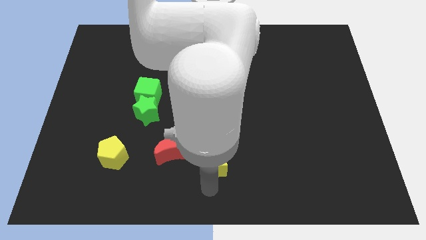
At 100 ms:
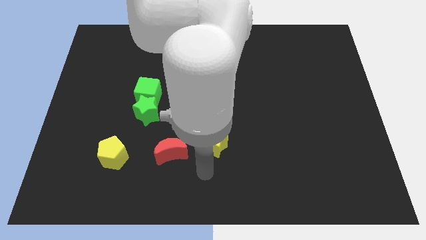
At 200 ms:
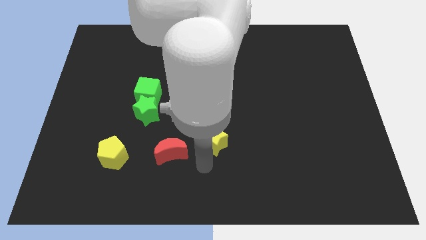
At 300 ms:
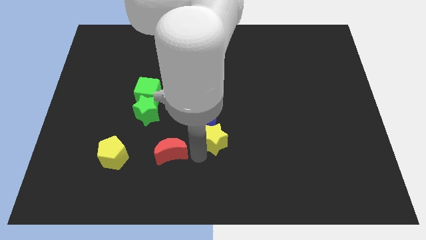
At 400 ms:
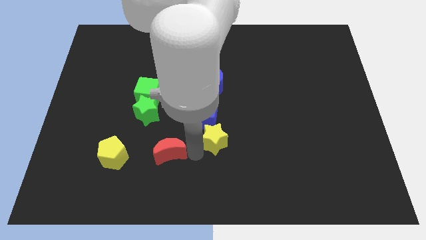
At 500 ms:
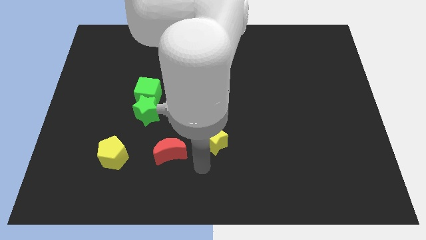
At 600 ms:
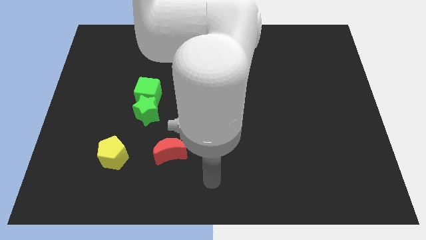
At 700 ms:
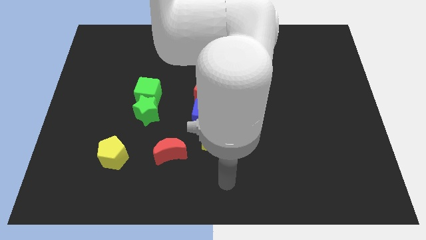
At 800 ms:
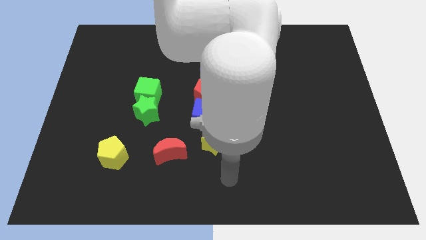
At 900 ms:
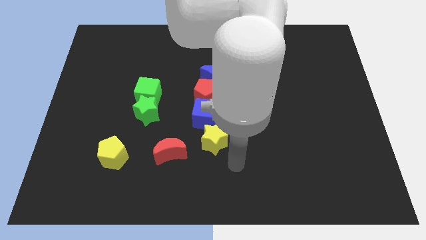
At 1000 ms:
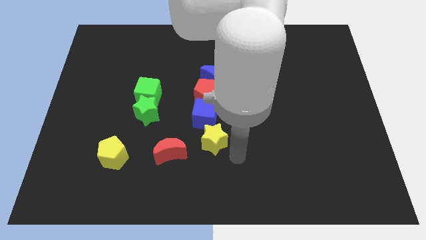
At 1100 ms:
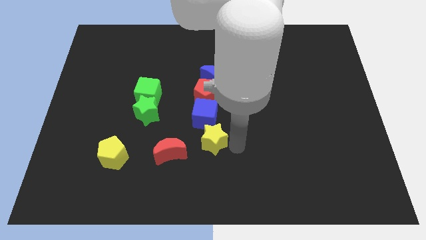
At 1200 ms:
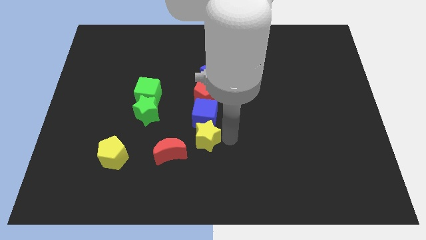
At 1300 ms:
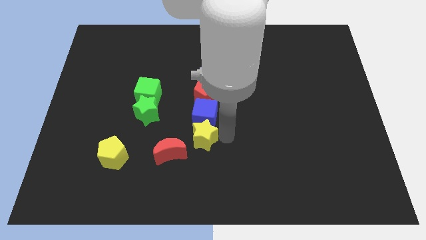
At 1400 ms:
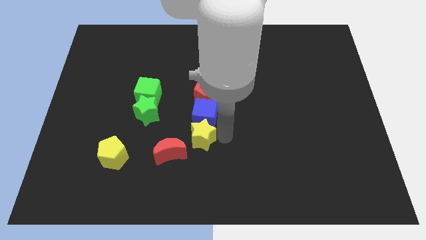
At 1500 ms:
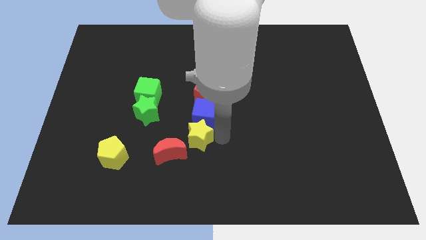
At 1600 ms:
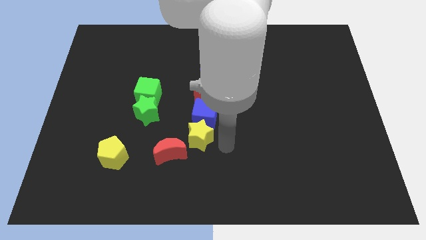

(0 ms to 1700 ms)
push the yellow star to the bottom of the blue cube

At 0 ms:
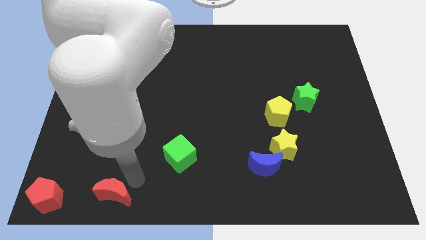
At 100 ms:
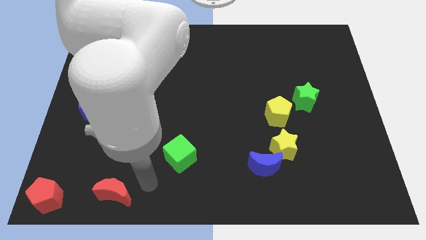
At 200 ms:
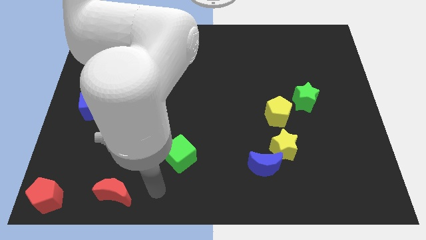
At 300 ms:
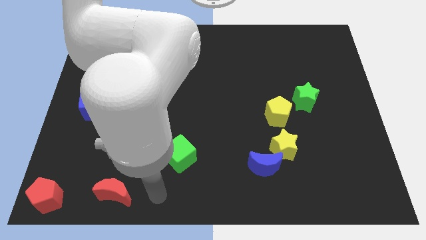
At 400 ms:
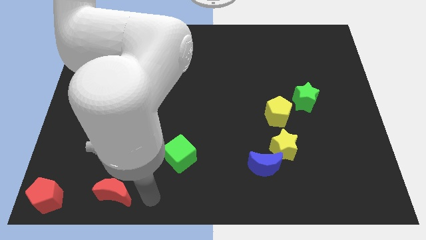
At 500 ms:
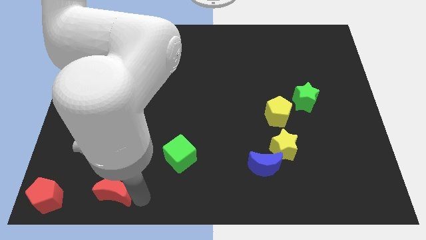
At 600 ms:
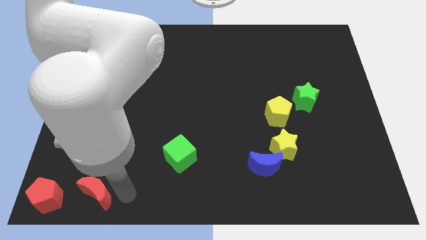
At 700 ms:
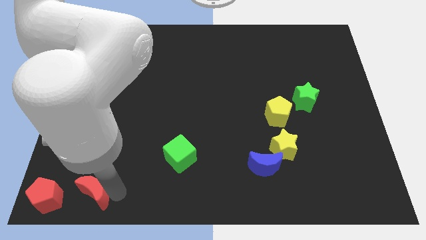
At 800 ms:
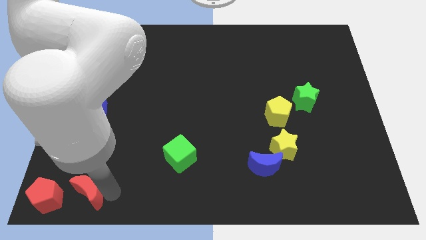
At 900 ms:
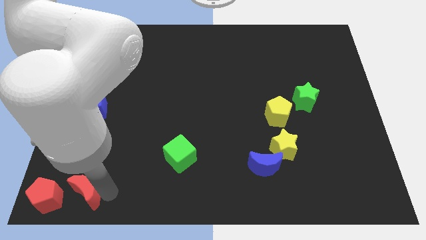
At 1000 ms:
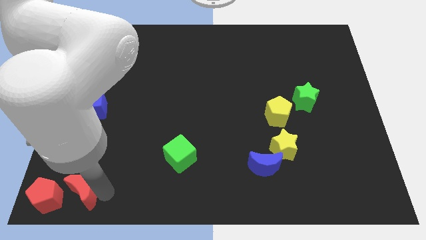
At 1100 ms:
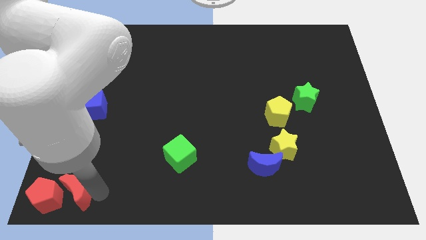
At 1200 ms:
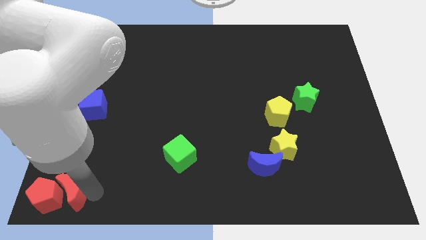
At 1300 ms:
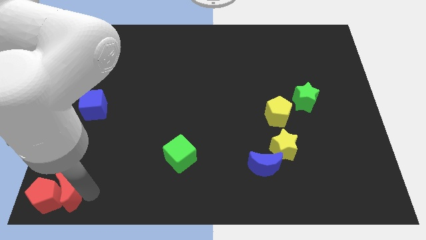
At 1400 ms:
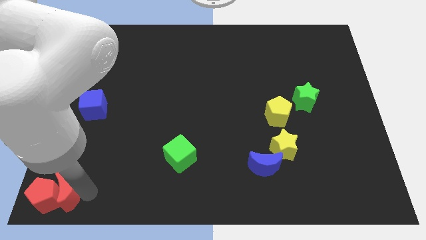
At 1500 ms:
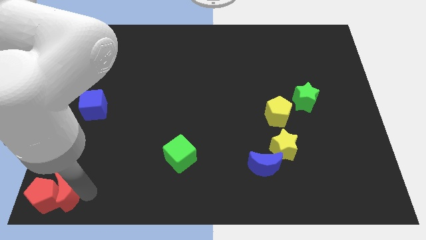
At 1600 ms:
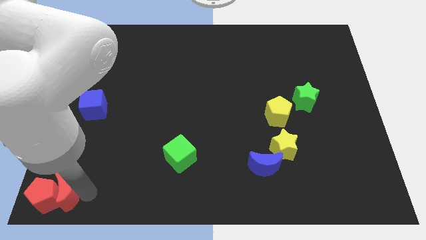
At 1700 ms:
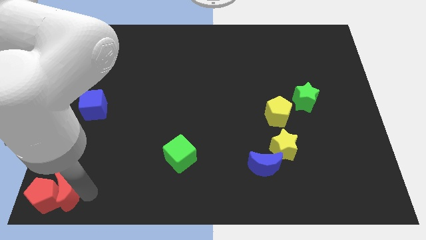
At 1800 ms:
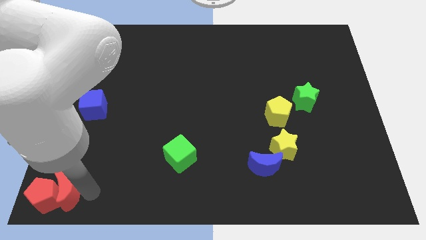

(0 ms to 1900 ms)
push the red moon into the red pentagon

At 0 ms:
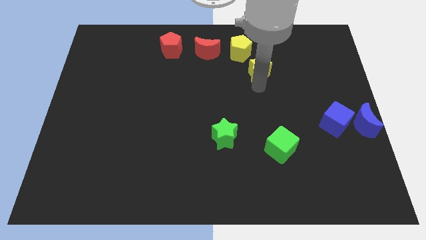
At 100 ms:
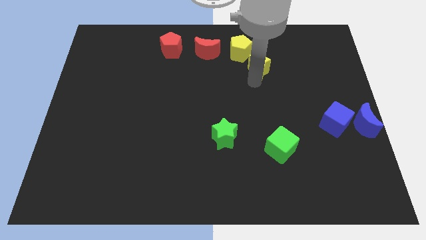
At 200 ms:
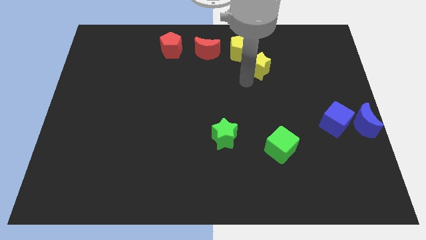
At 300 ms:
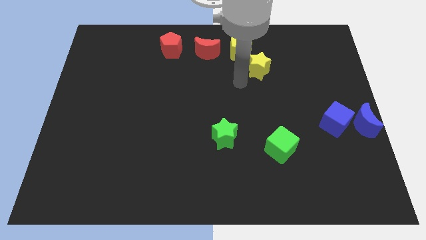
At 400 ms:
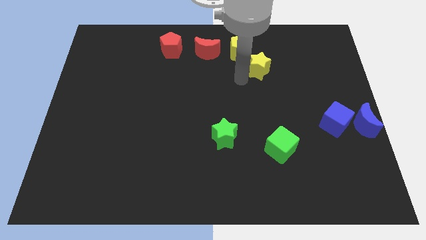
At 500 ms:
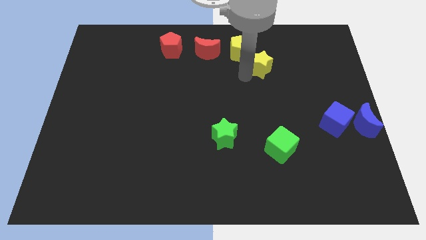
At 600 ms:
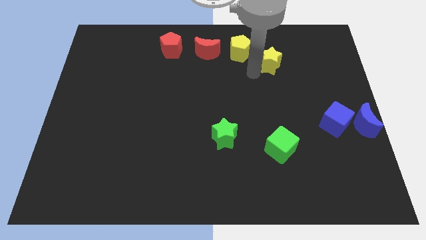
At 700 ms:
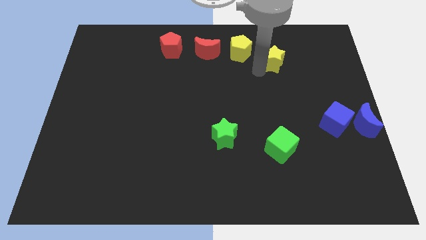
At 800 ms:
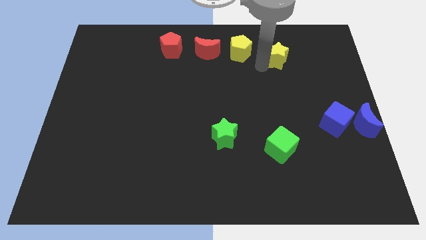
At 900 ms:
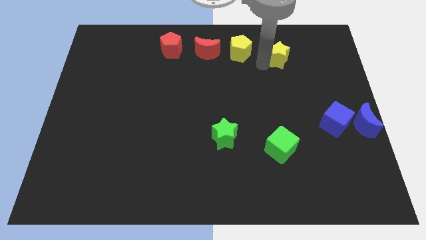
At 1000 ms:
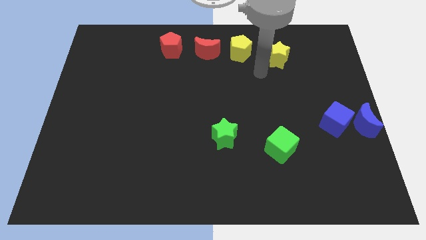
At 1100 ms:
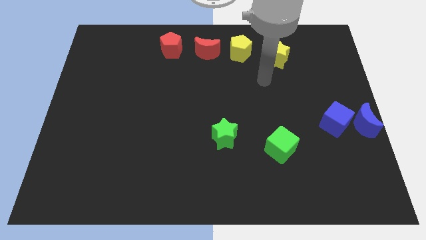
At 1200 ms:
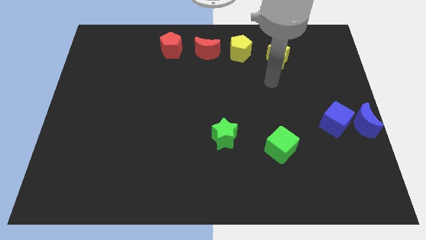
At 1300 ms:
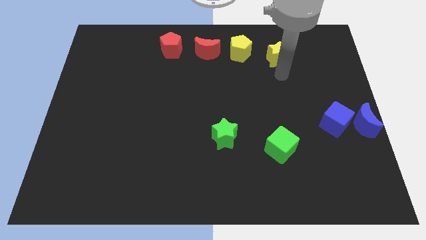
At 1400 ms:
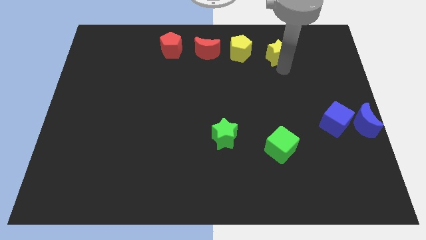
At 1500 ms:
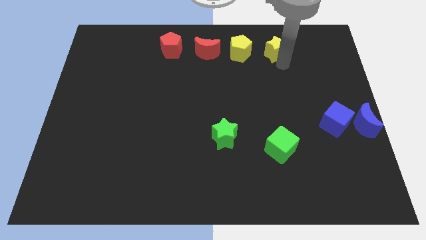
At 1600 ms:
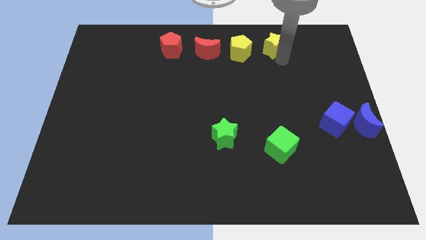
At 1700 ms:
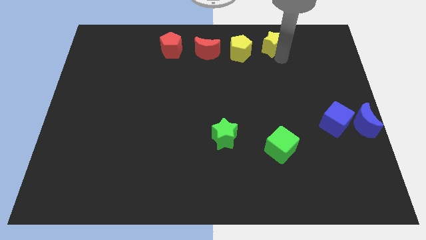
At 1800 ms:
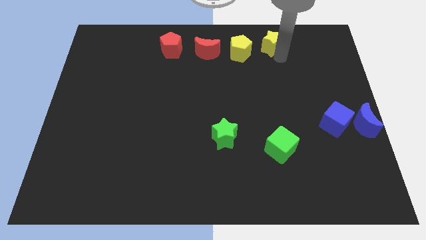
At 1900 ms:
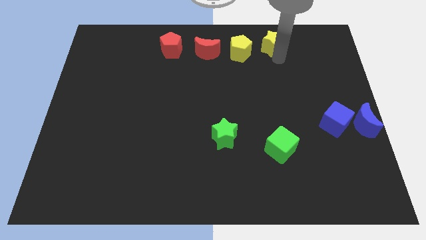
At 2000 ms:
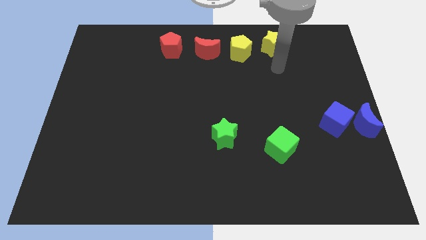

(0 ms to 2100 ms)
place the yellow star to the right of the yellow pentagon

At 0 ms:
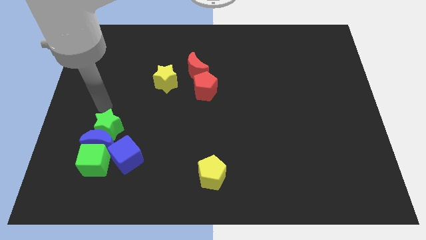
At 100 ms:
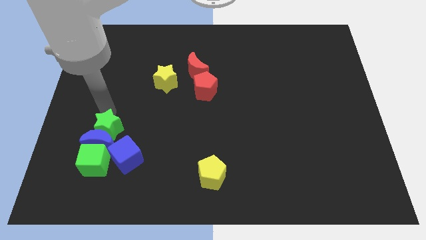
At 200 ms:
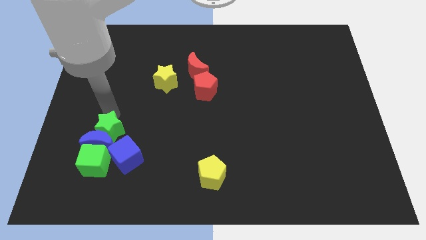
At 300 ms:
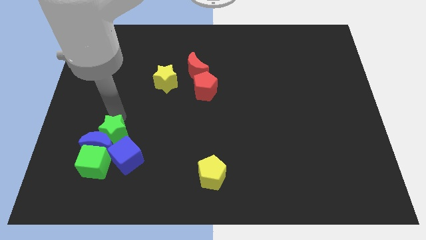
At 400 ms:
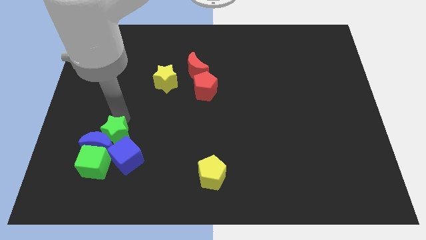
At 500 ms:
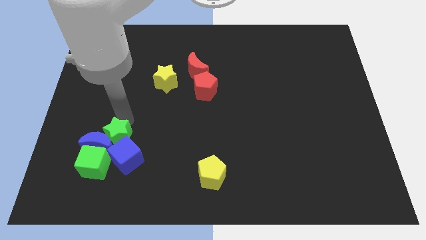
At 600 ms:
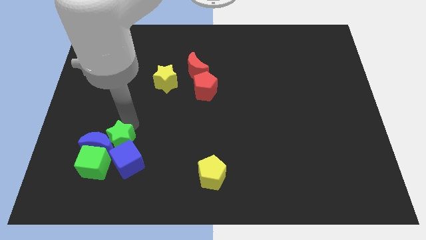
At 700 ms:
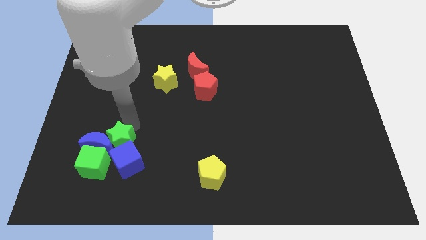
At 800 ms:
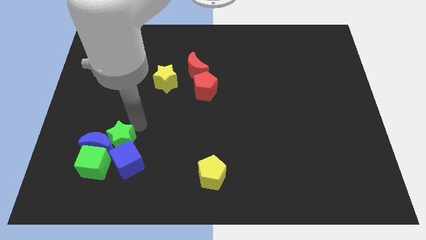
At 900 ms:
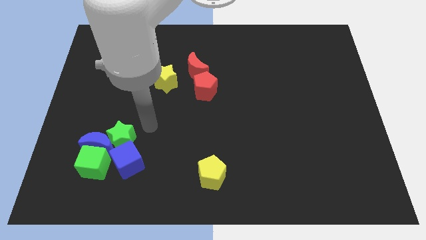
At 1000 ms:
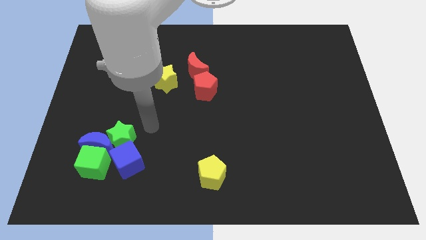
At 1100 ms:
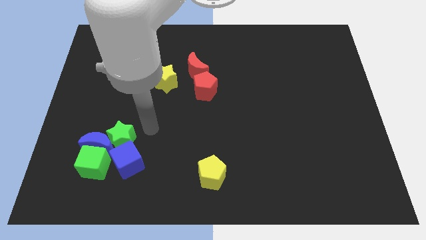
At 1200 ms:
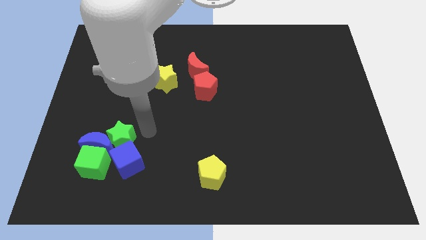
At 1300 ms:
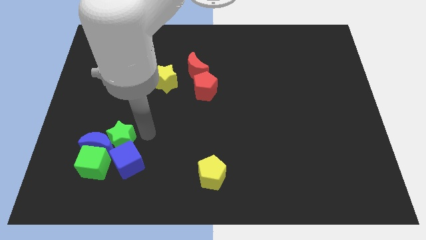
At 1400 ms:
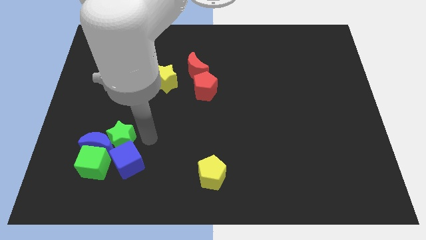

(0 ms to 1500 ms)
move the green star into blue cube

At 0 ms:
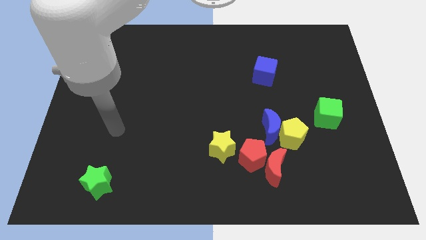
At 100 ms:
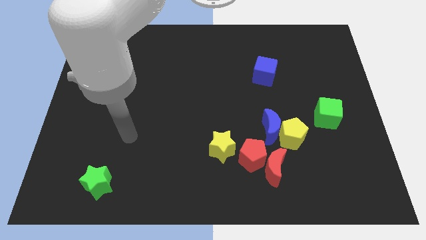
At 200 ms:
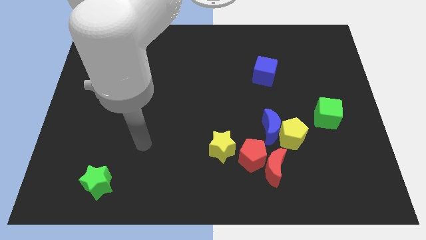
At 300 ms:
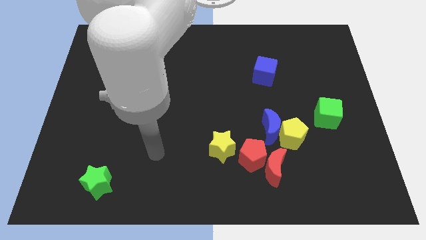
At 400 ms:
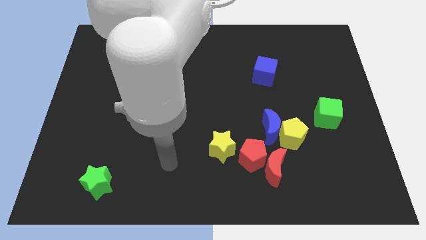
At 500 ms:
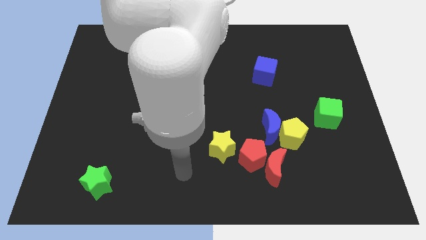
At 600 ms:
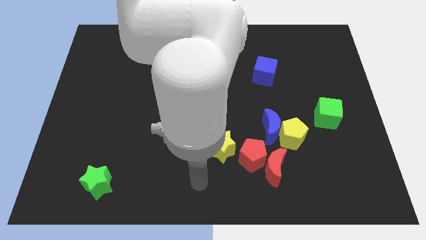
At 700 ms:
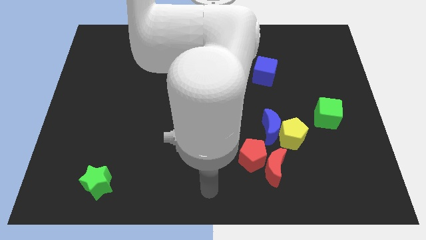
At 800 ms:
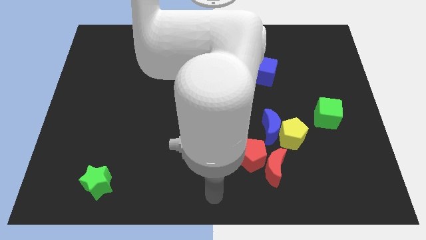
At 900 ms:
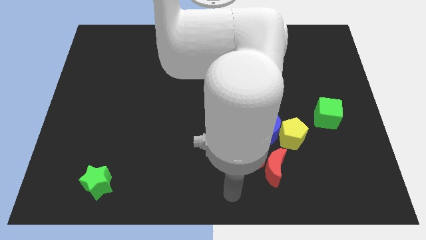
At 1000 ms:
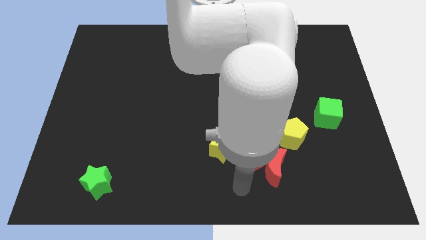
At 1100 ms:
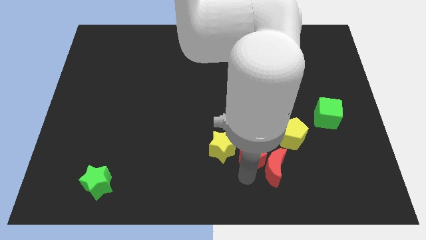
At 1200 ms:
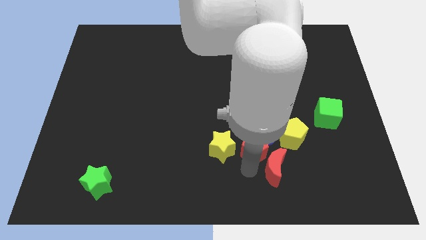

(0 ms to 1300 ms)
point your arm at the bottom of the red pentagon

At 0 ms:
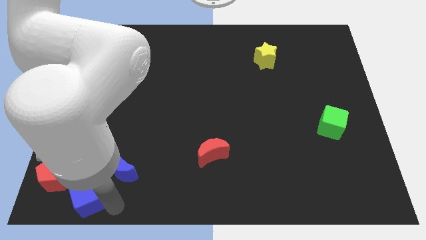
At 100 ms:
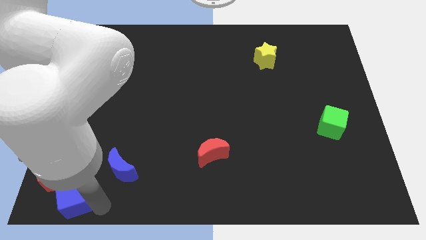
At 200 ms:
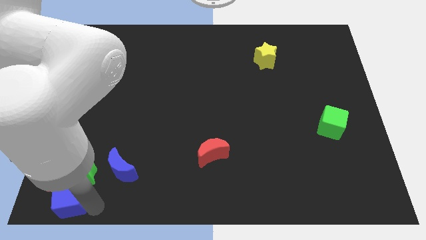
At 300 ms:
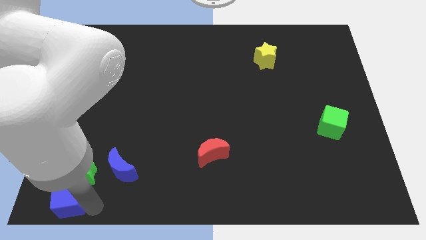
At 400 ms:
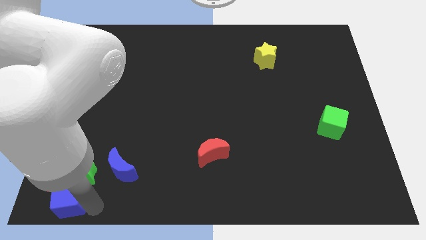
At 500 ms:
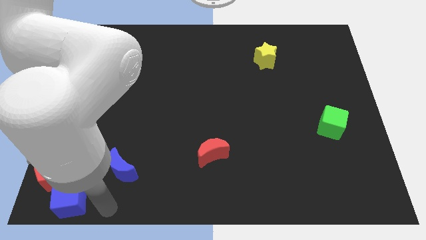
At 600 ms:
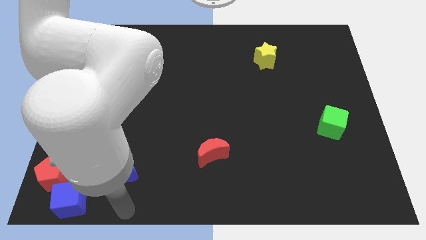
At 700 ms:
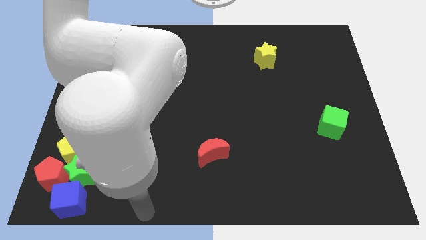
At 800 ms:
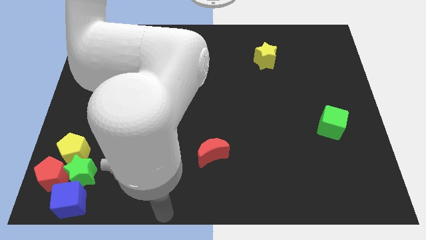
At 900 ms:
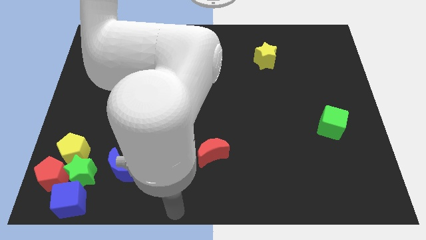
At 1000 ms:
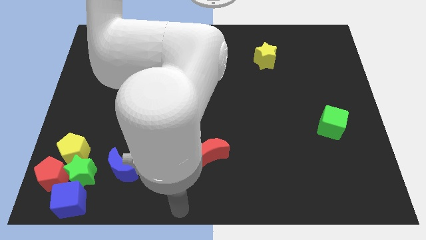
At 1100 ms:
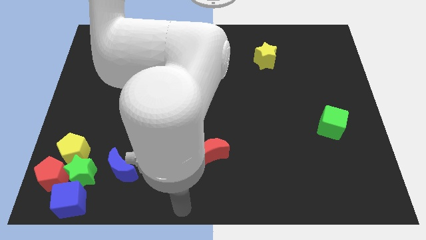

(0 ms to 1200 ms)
slide blue cube into red pentagon
